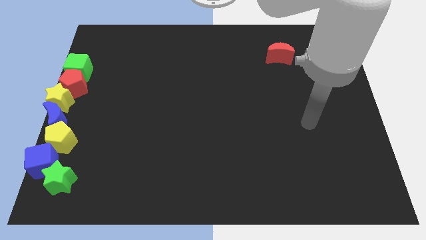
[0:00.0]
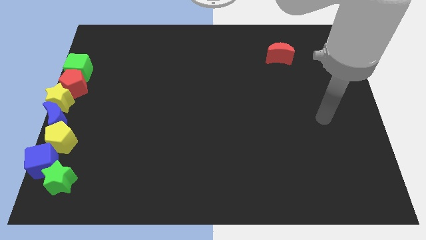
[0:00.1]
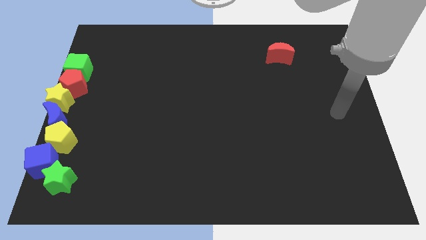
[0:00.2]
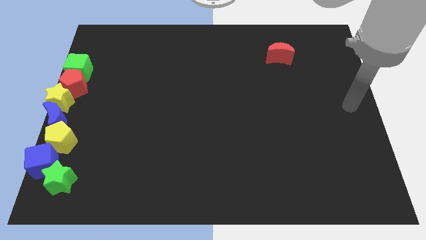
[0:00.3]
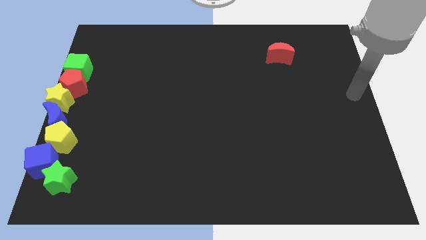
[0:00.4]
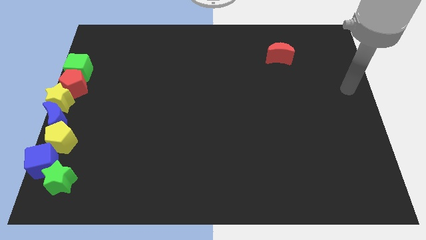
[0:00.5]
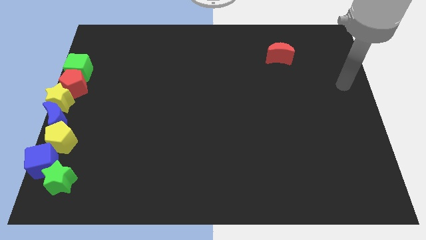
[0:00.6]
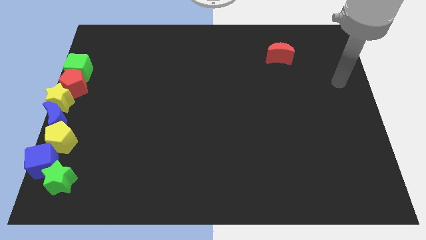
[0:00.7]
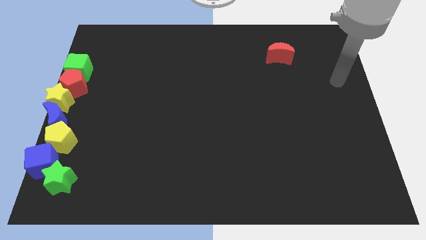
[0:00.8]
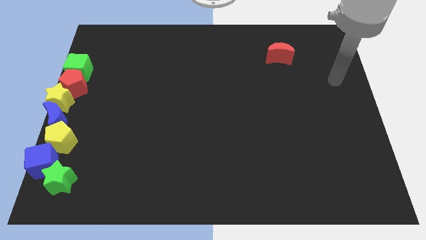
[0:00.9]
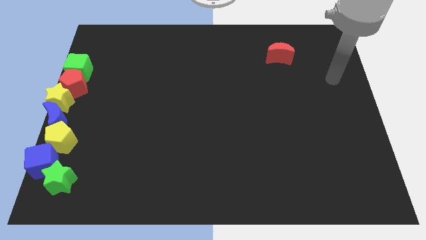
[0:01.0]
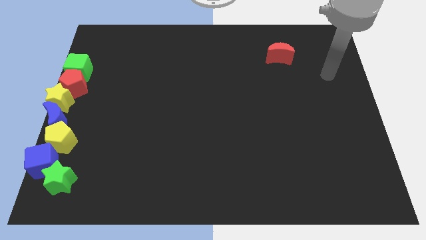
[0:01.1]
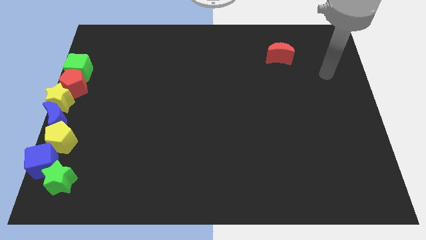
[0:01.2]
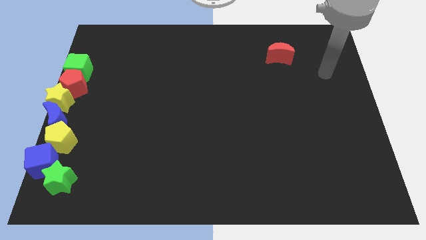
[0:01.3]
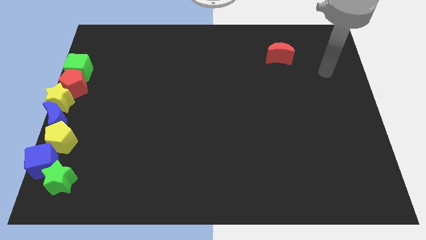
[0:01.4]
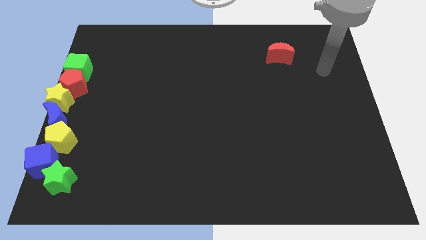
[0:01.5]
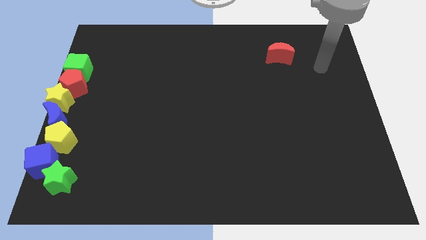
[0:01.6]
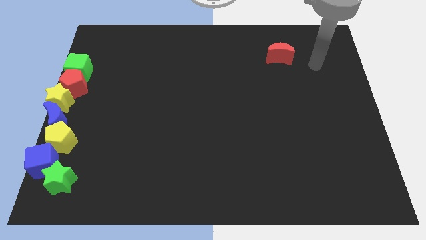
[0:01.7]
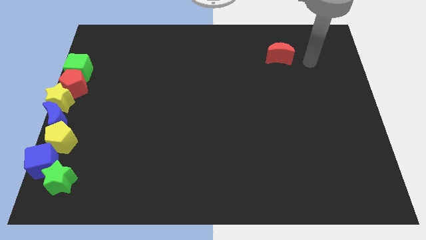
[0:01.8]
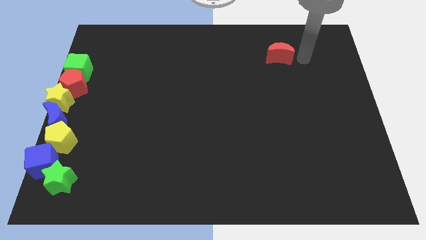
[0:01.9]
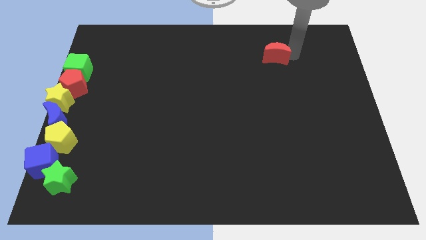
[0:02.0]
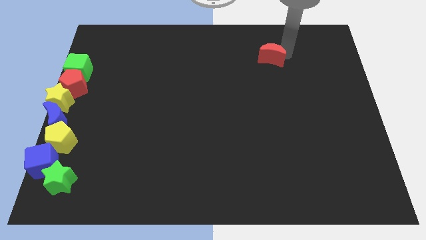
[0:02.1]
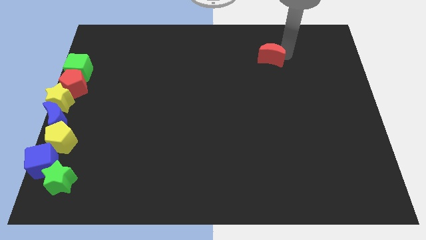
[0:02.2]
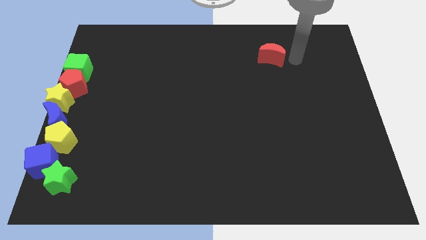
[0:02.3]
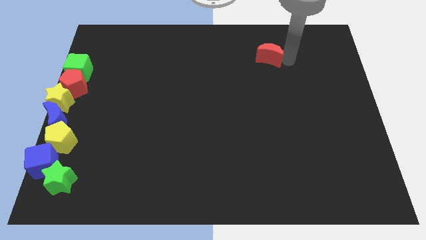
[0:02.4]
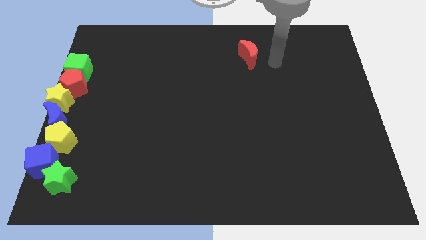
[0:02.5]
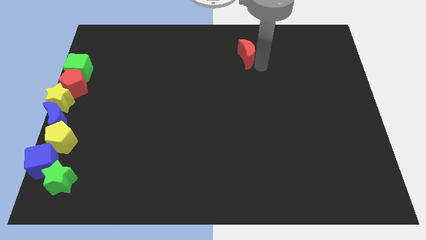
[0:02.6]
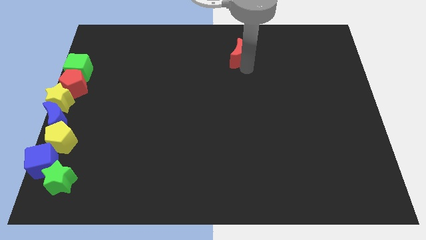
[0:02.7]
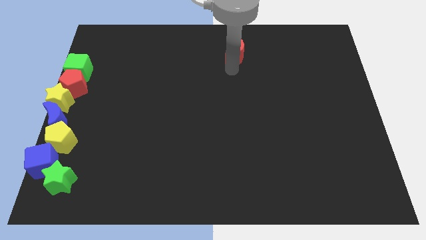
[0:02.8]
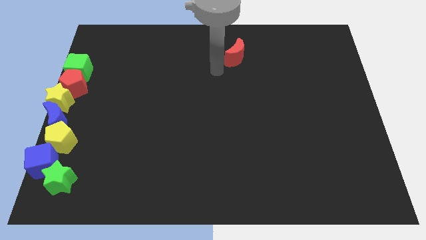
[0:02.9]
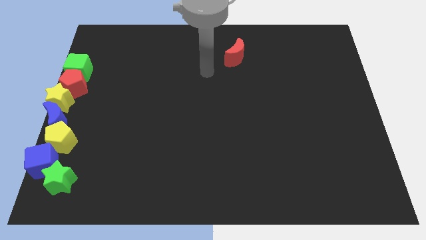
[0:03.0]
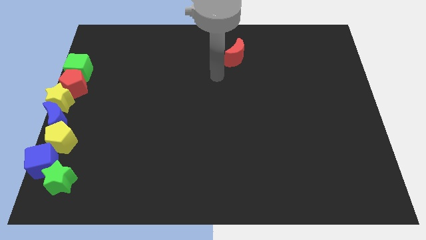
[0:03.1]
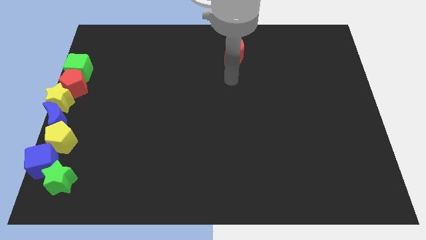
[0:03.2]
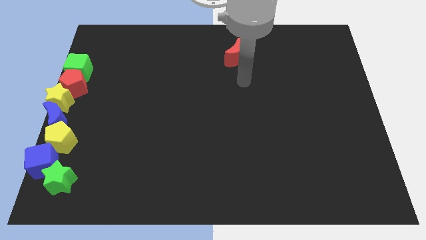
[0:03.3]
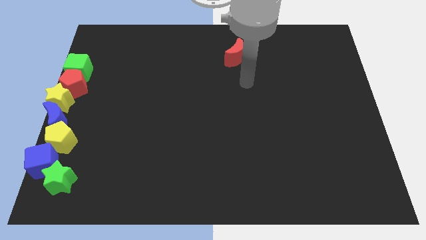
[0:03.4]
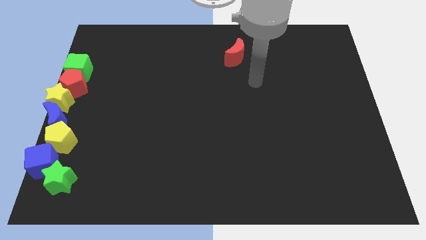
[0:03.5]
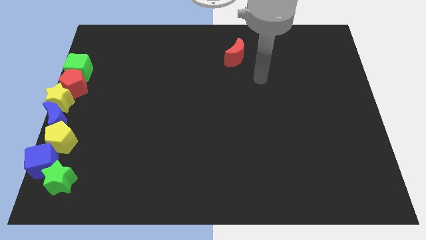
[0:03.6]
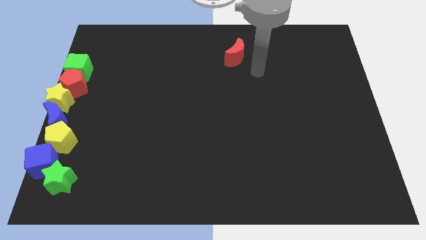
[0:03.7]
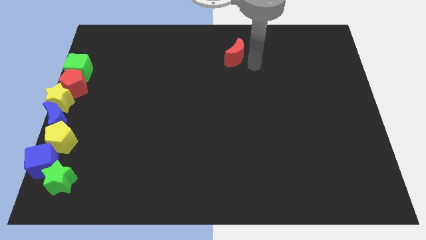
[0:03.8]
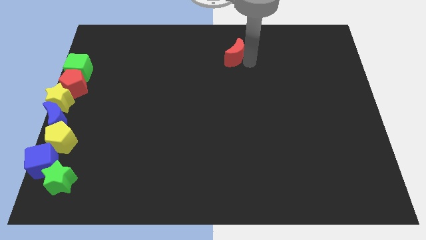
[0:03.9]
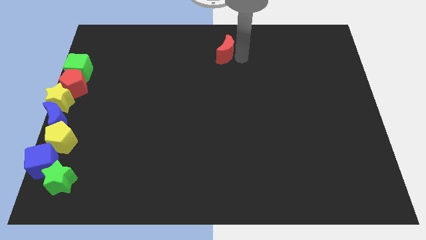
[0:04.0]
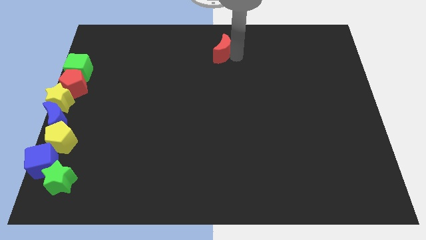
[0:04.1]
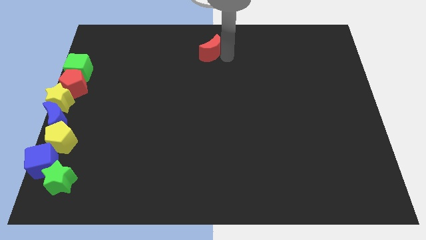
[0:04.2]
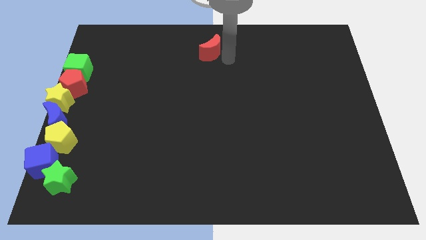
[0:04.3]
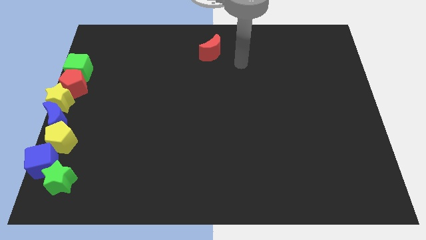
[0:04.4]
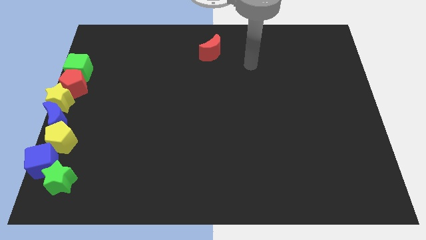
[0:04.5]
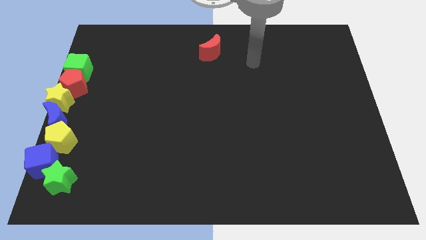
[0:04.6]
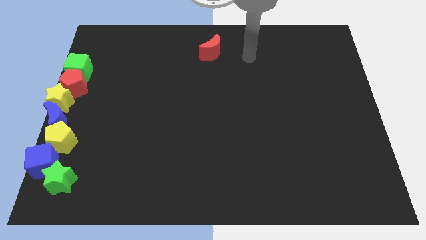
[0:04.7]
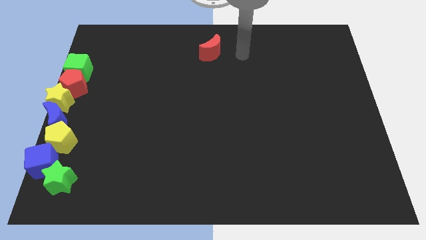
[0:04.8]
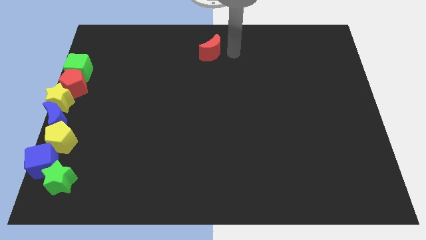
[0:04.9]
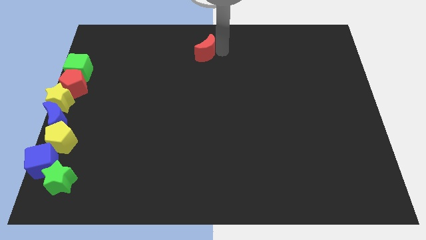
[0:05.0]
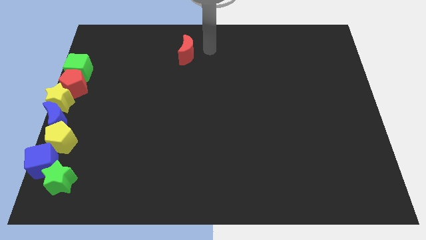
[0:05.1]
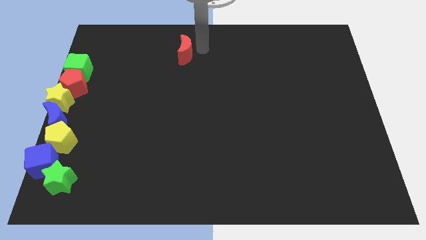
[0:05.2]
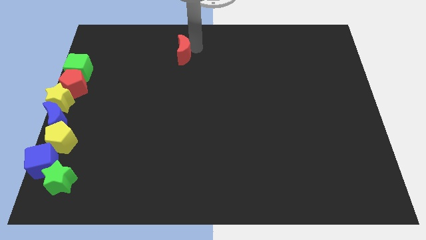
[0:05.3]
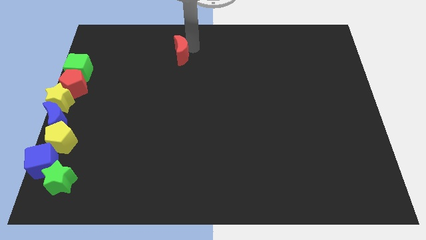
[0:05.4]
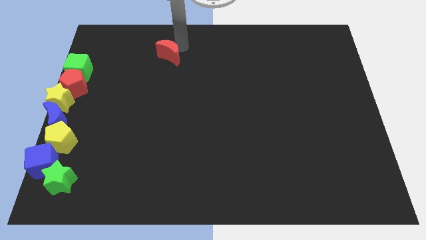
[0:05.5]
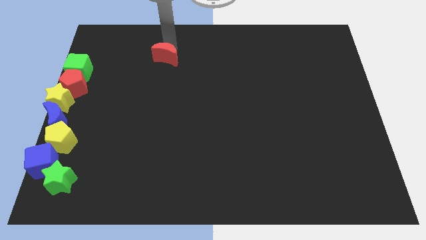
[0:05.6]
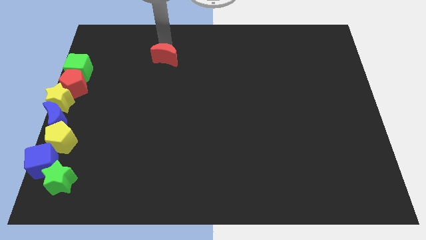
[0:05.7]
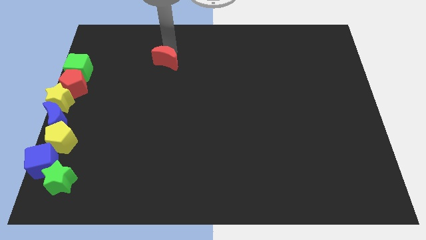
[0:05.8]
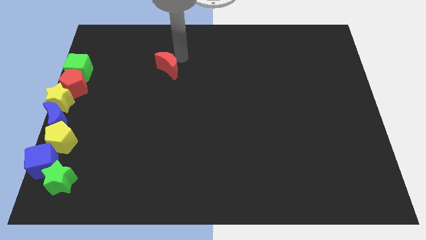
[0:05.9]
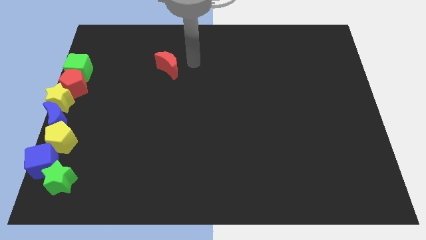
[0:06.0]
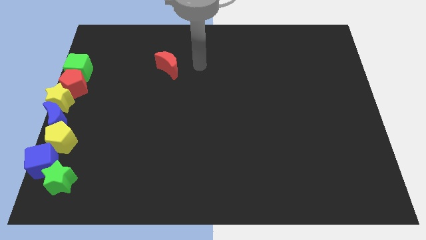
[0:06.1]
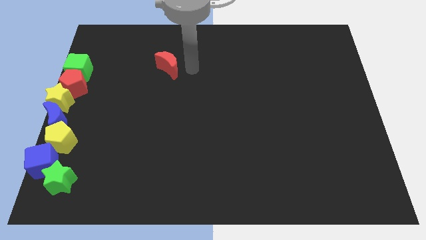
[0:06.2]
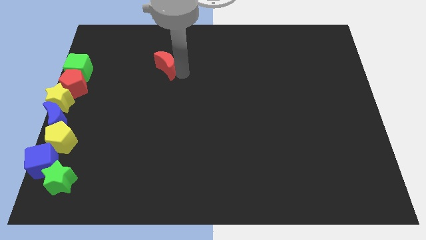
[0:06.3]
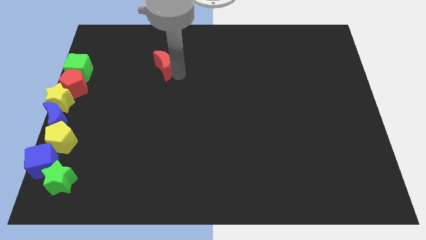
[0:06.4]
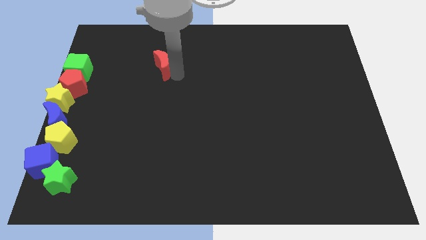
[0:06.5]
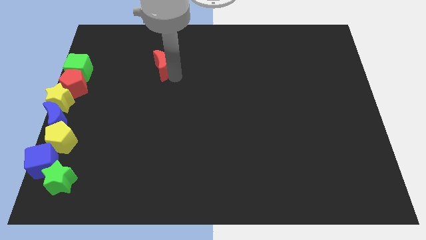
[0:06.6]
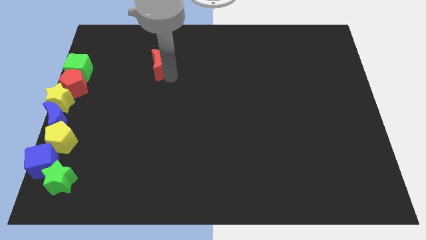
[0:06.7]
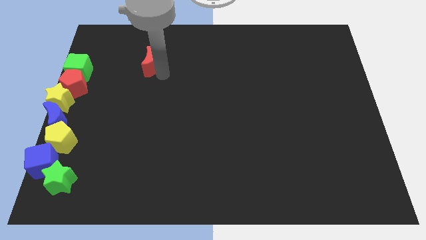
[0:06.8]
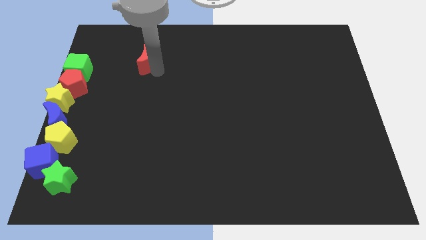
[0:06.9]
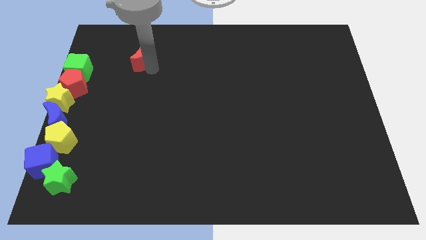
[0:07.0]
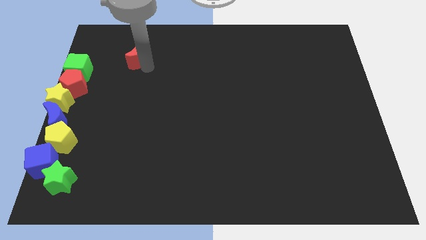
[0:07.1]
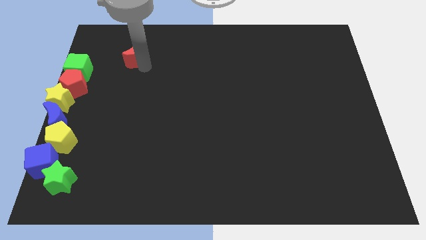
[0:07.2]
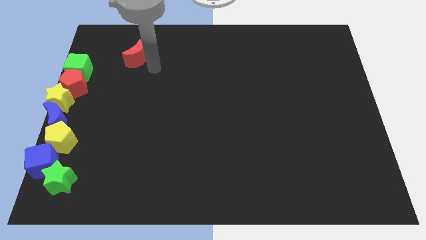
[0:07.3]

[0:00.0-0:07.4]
move the red crescent towards left of the green cube

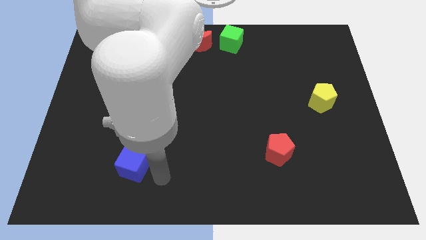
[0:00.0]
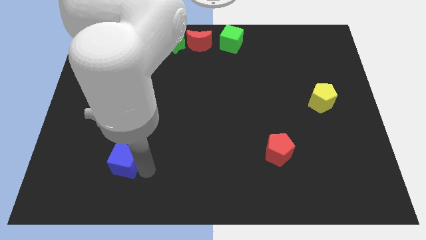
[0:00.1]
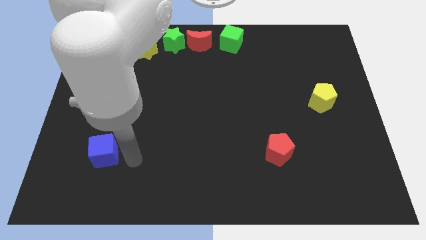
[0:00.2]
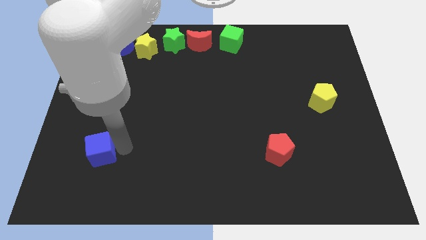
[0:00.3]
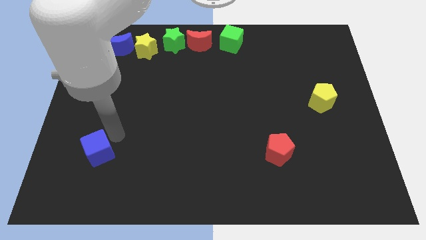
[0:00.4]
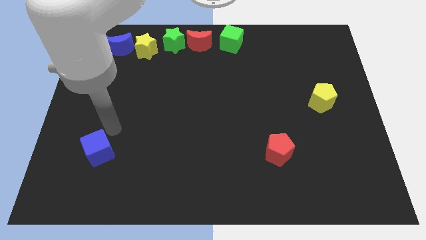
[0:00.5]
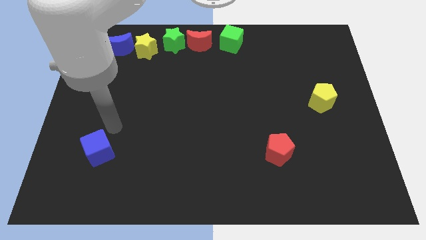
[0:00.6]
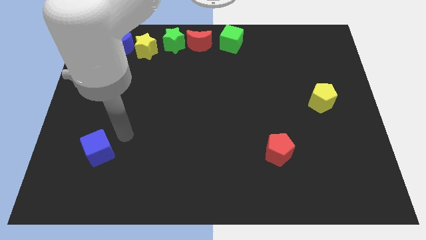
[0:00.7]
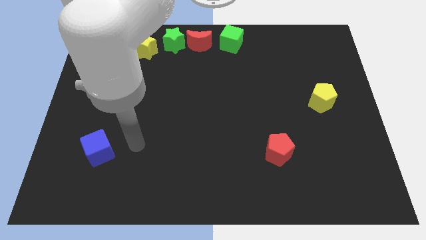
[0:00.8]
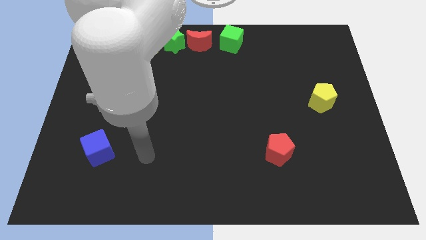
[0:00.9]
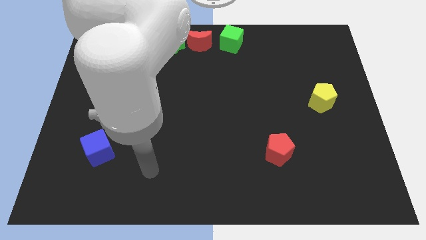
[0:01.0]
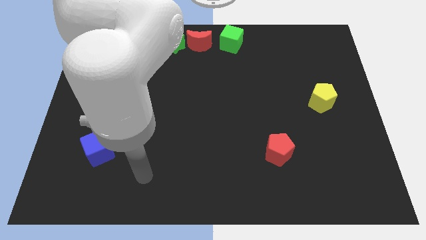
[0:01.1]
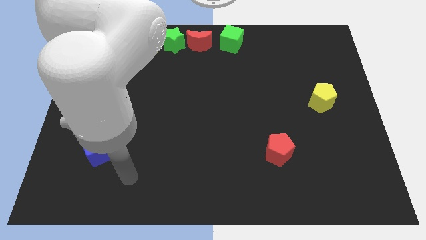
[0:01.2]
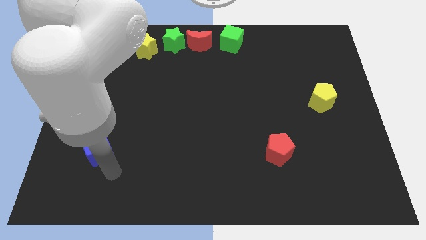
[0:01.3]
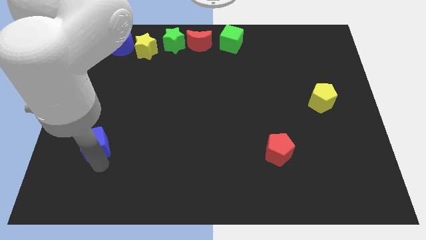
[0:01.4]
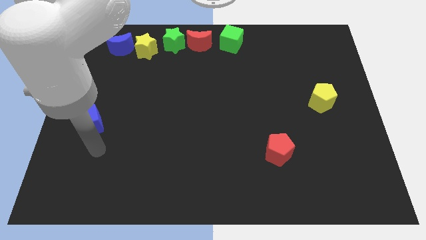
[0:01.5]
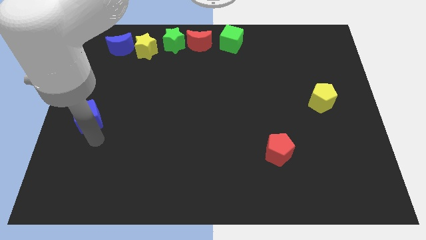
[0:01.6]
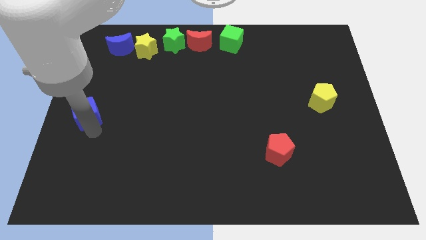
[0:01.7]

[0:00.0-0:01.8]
move the blue cube to the left center of the board
